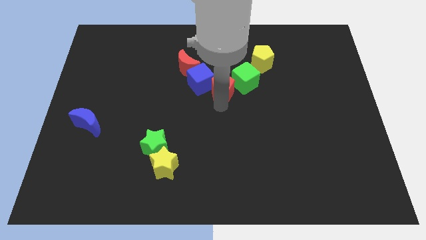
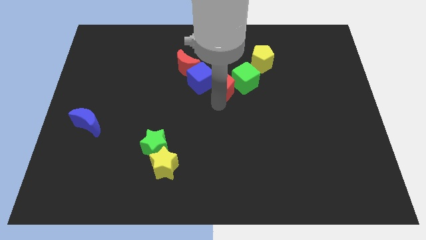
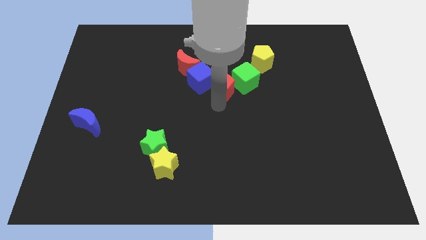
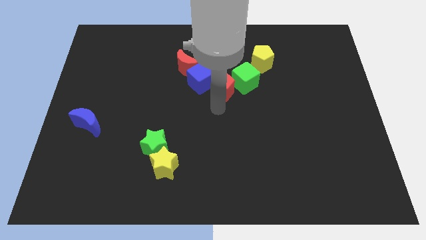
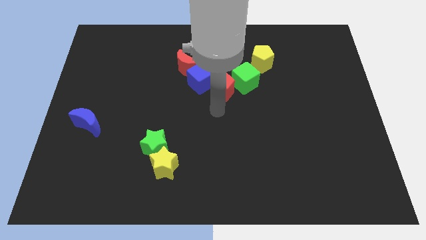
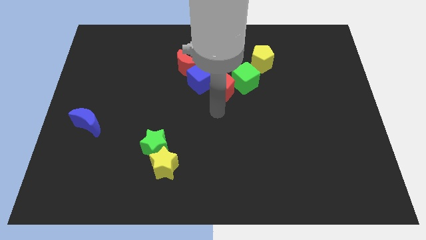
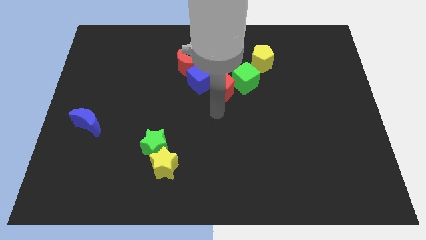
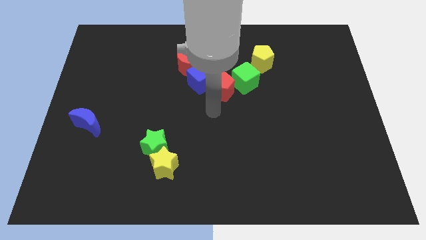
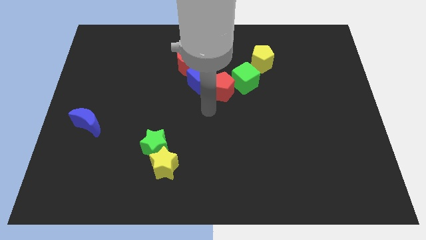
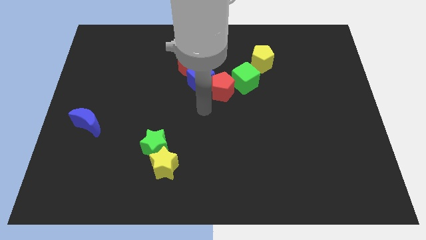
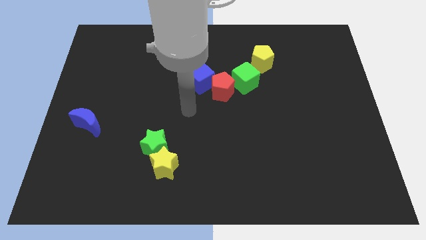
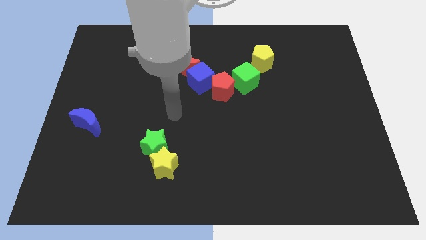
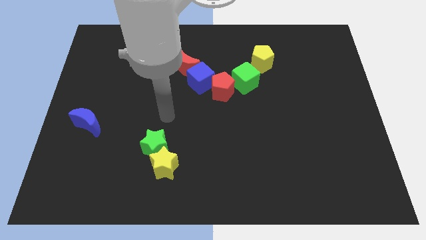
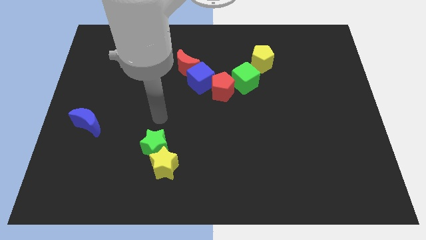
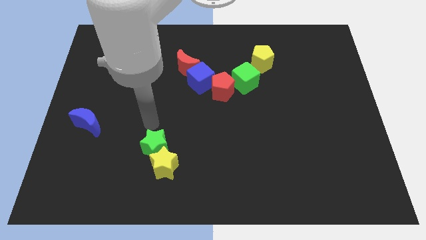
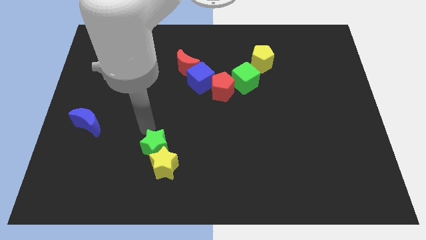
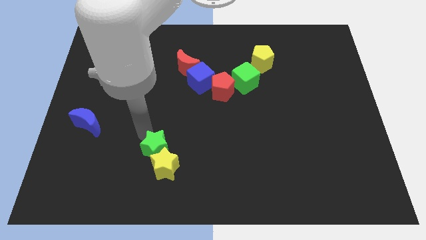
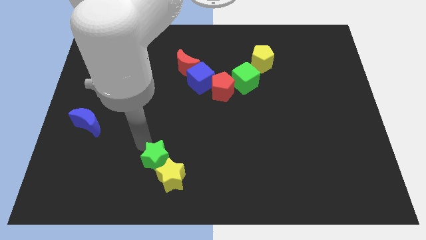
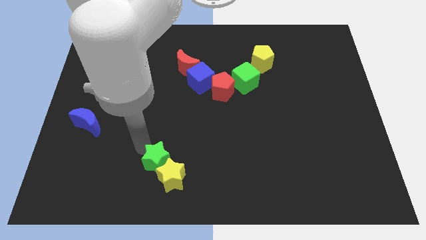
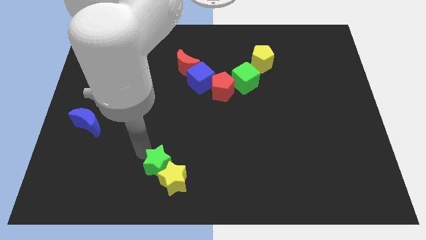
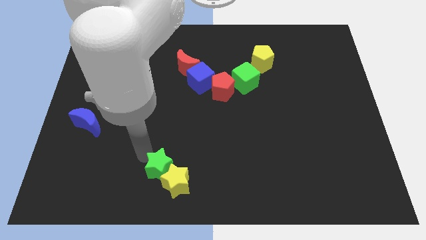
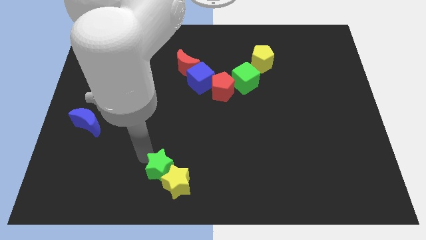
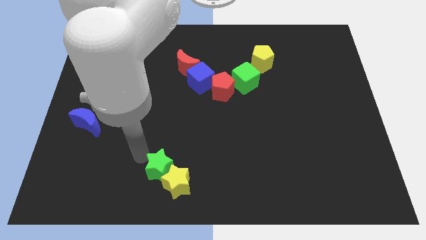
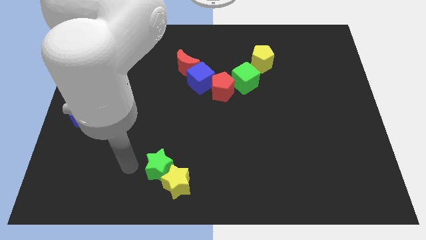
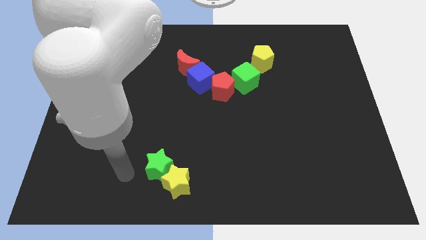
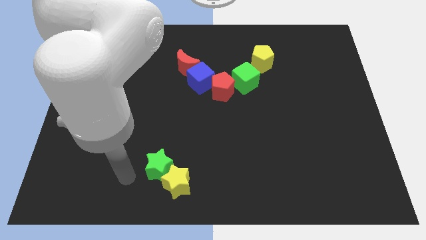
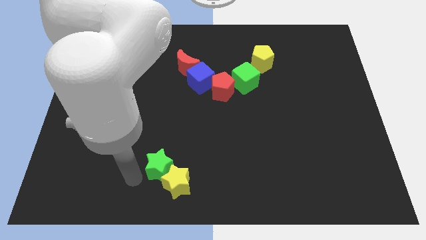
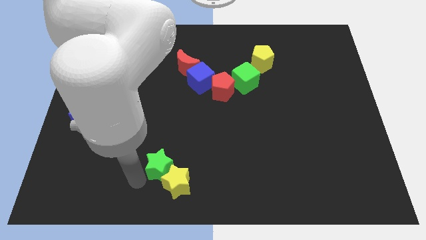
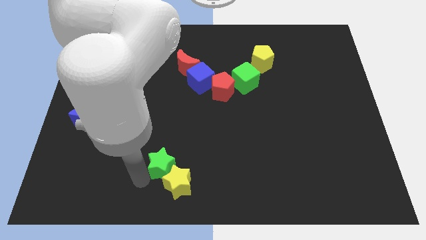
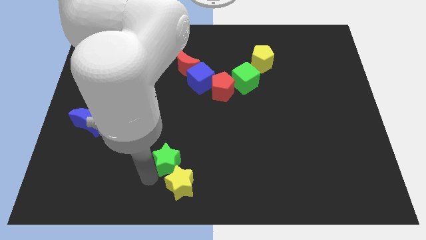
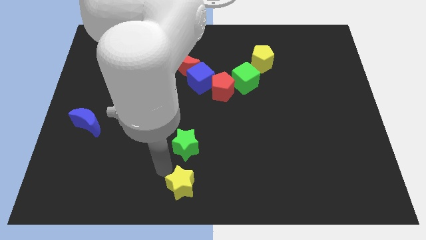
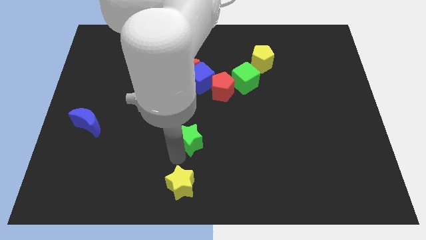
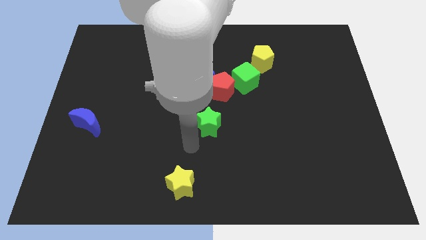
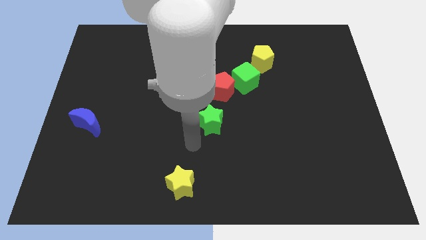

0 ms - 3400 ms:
push the green star into the yellow star

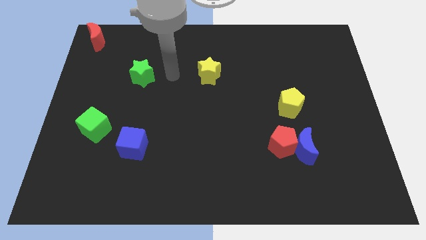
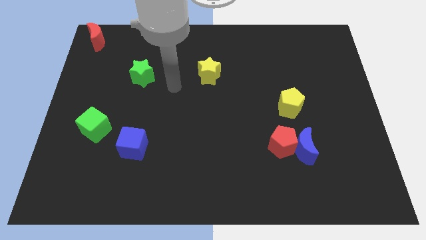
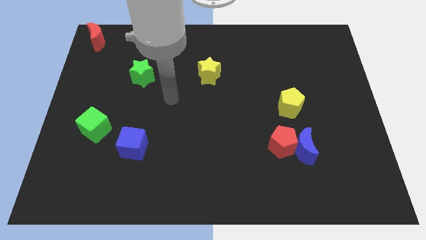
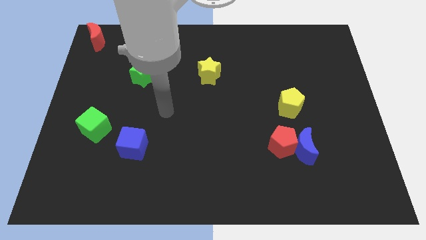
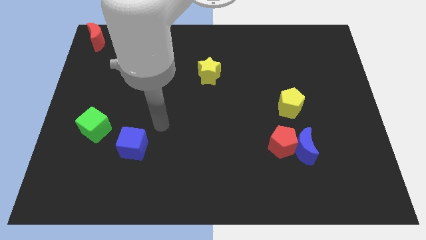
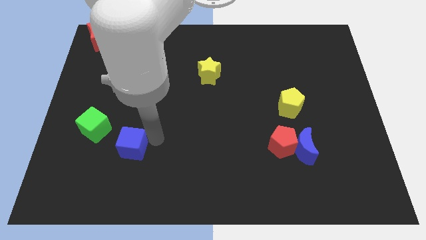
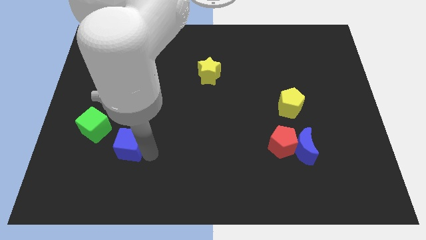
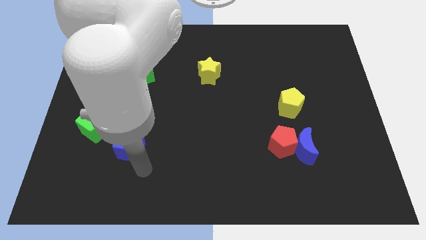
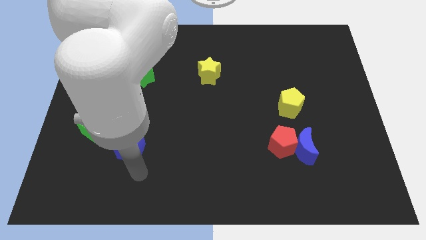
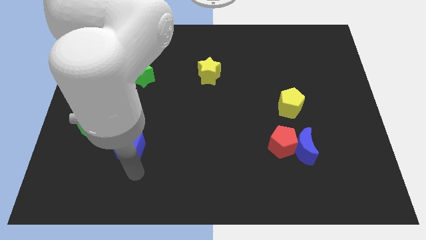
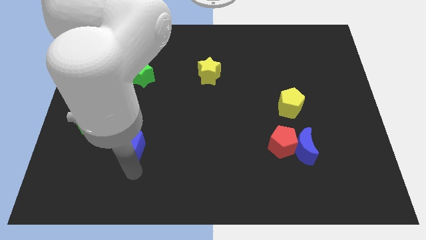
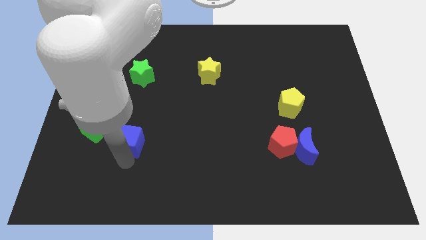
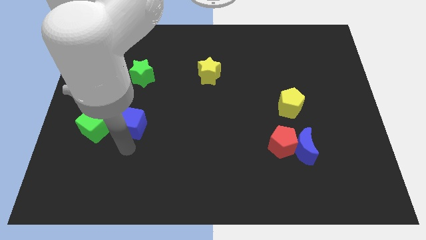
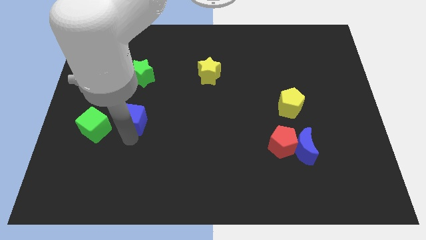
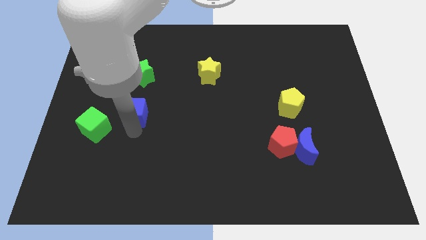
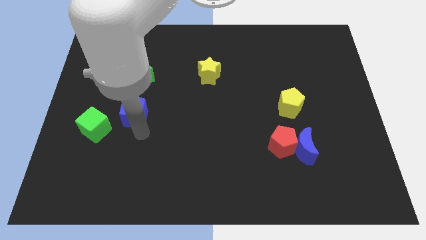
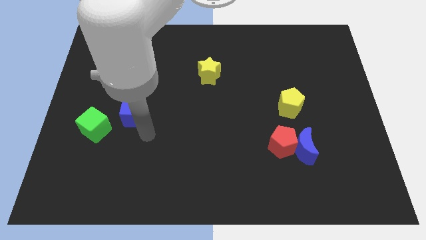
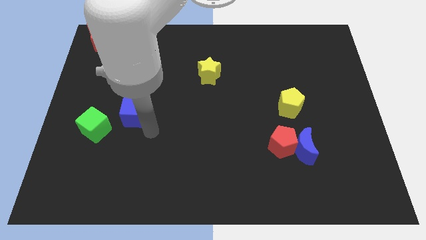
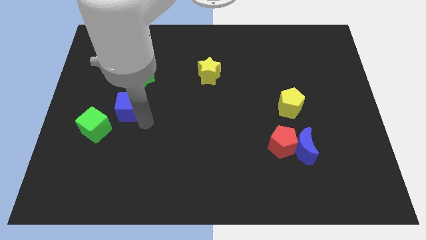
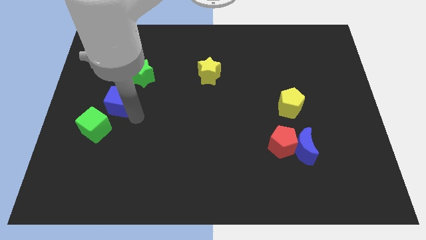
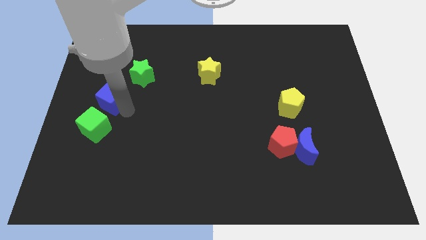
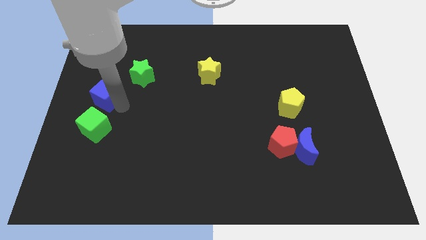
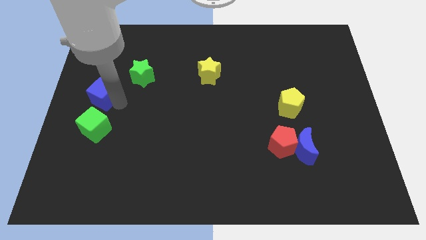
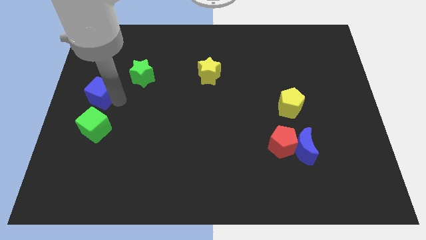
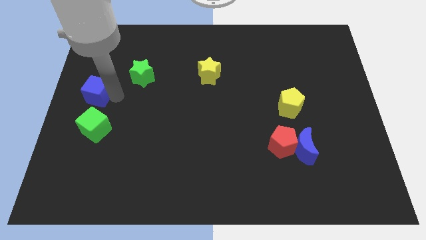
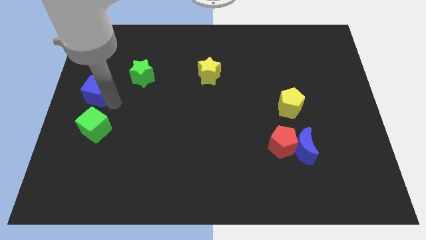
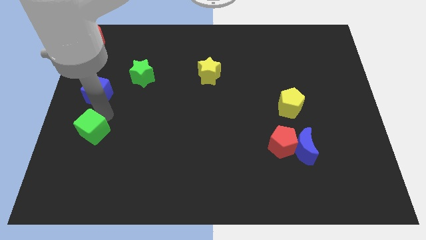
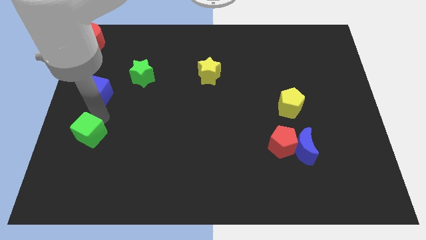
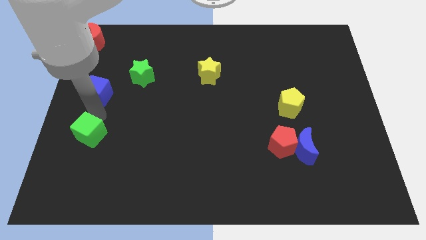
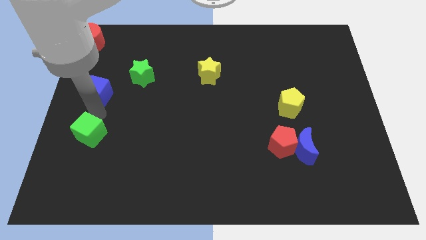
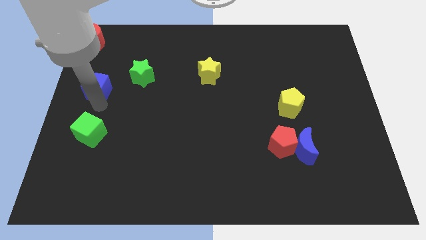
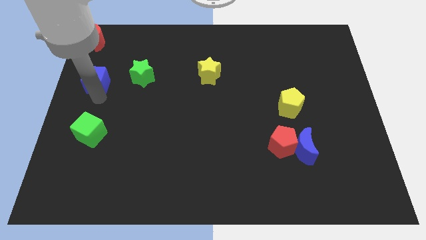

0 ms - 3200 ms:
place the blue cube to the left of the green star

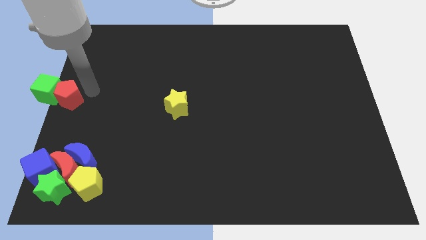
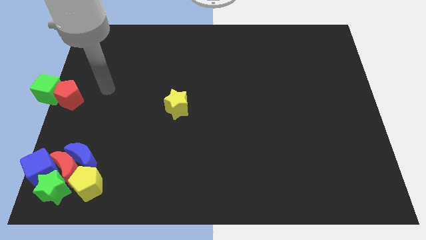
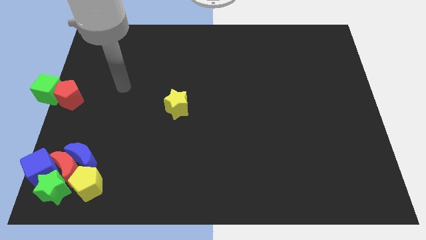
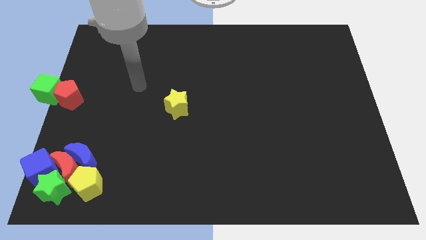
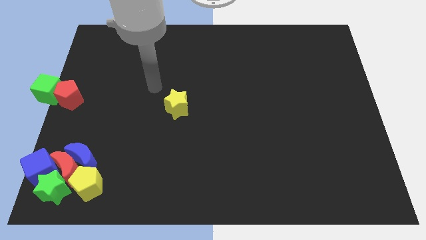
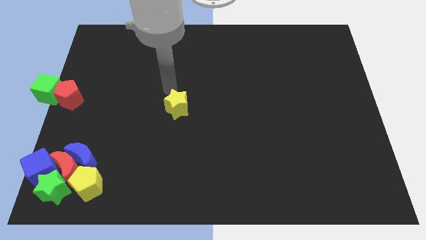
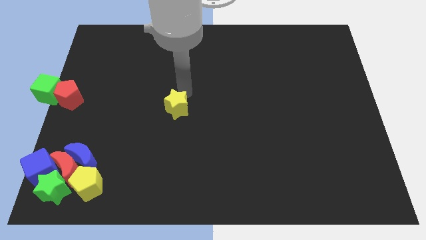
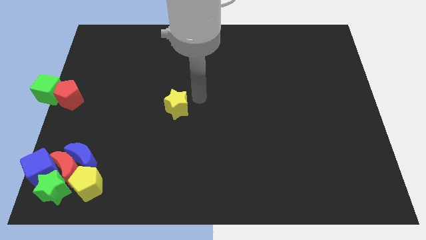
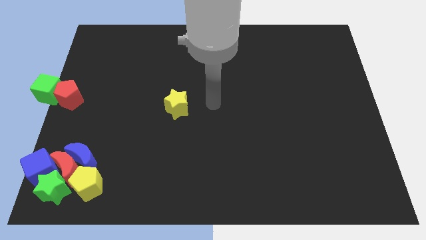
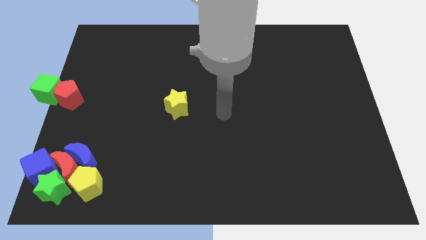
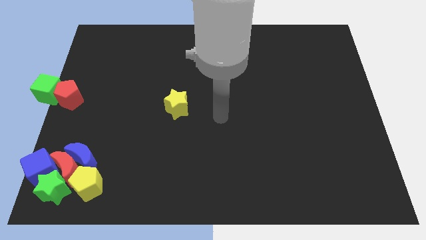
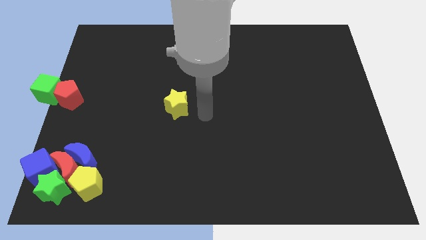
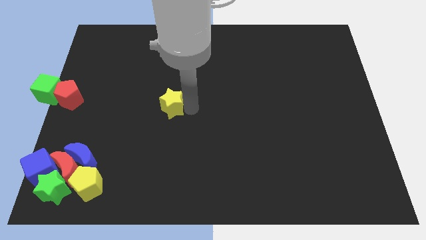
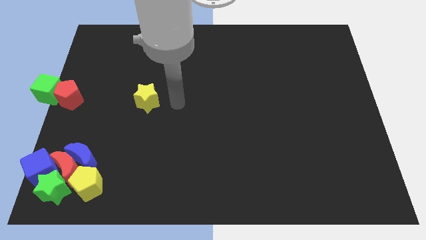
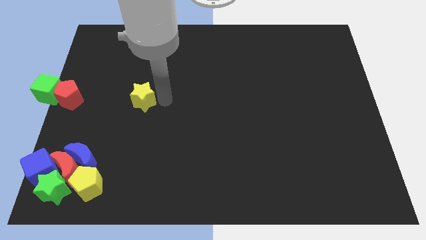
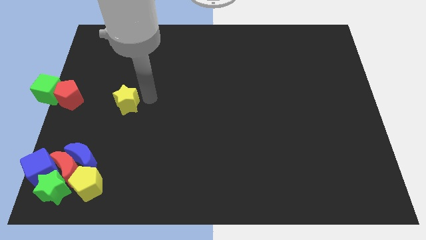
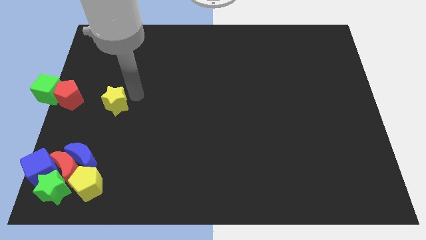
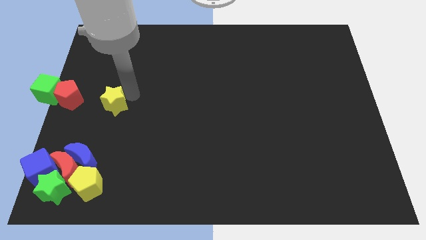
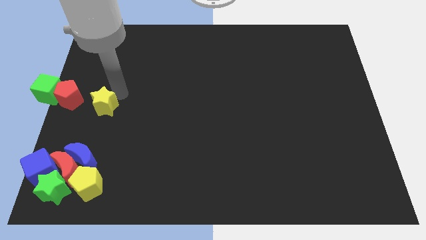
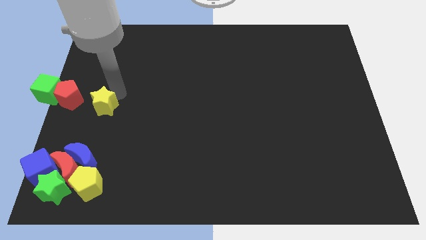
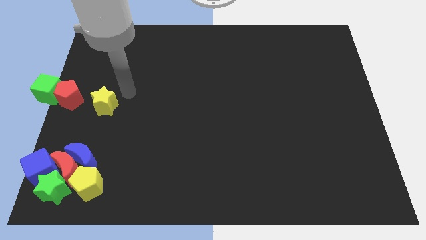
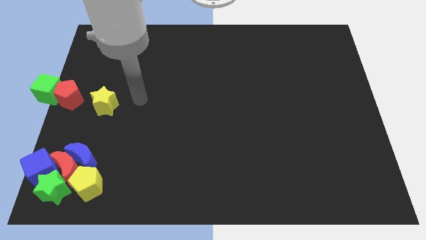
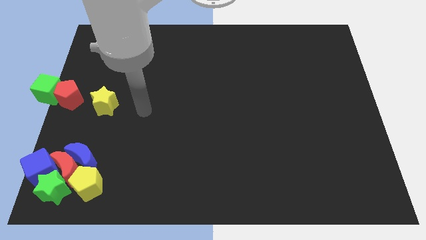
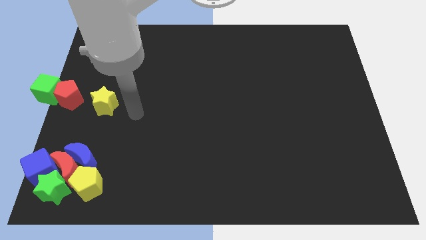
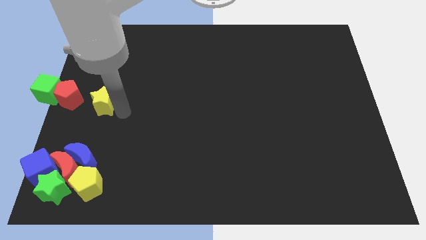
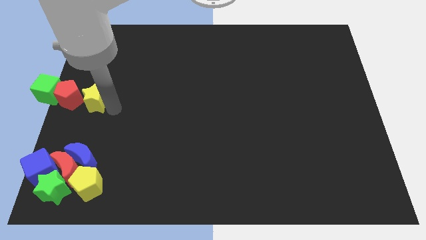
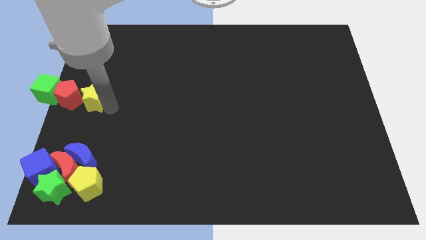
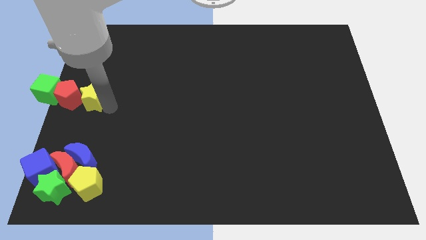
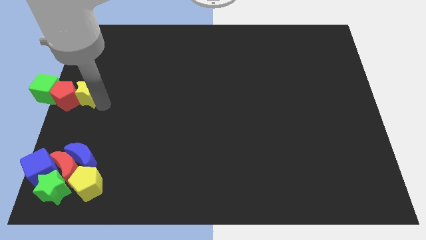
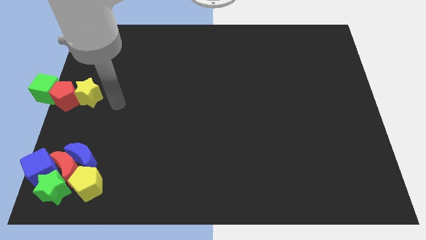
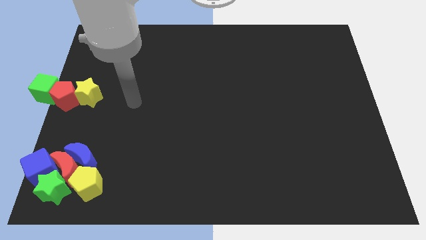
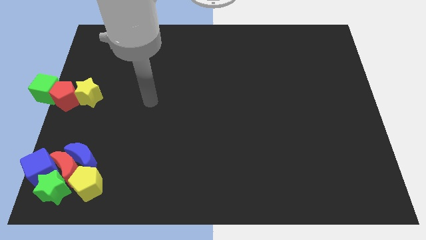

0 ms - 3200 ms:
move the yellow star right to the red pentagon
